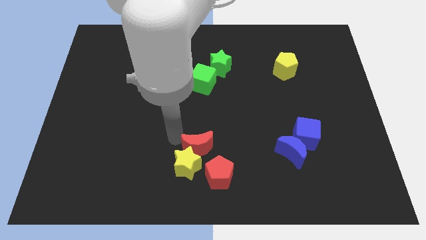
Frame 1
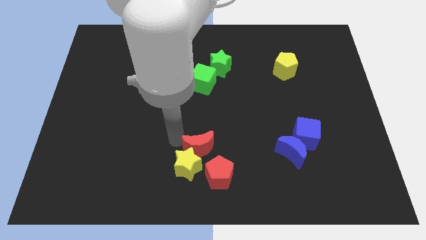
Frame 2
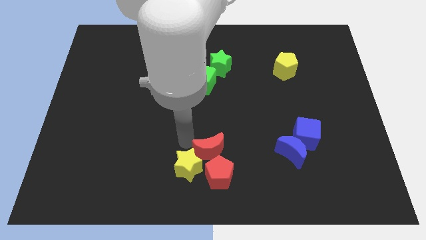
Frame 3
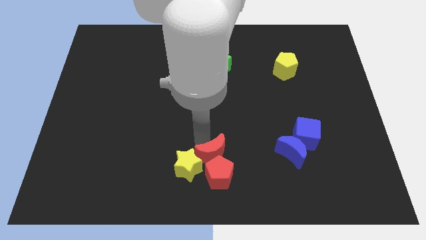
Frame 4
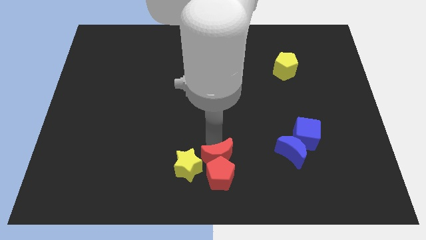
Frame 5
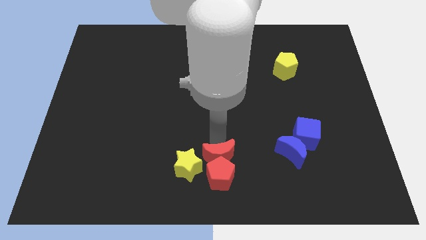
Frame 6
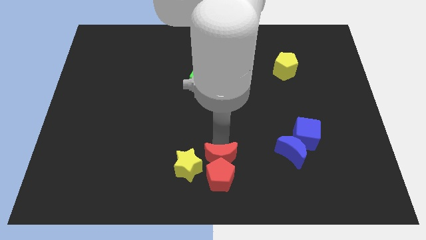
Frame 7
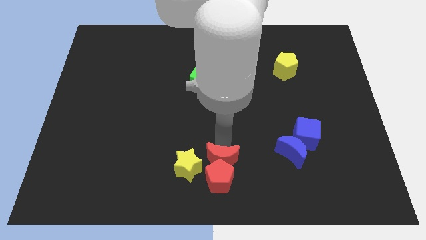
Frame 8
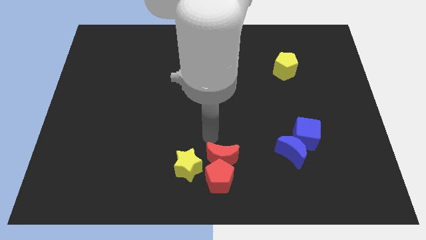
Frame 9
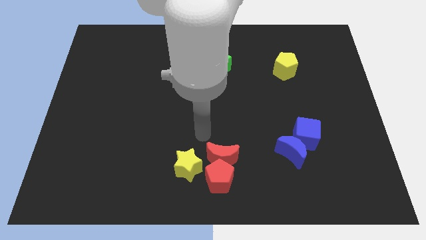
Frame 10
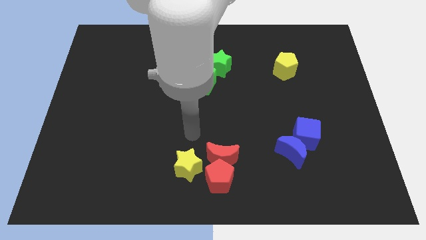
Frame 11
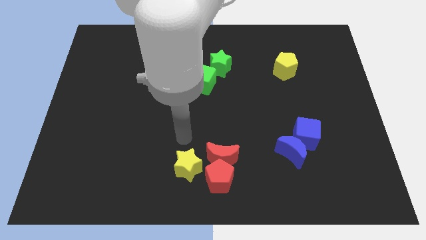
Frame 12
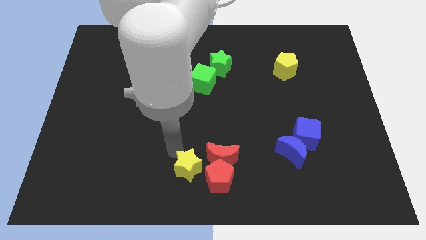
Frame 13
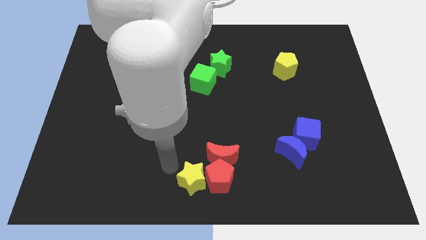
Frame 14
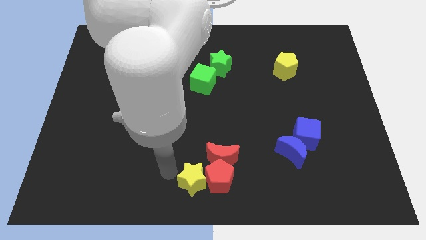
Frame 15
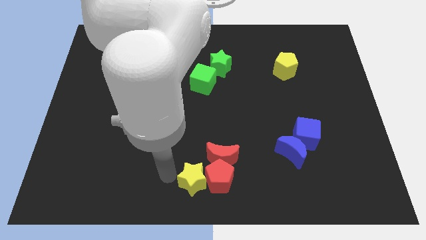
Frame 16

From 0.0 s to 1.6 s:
adjust the red moon on to the top of red pentagon

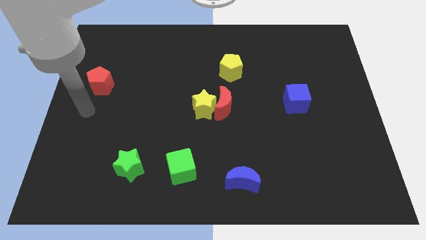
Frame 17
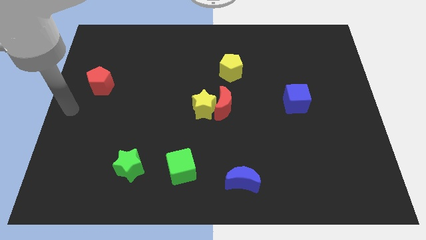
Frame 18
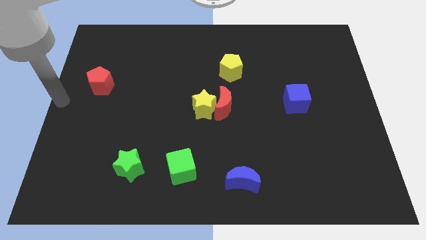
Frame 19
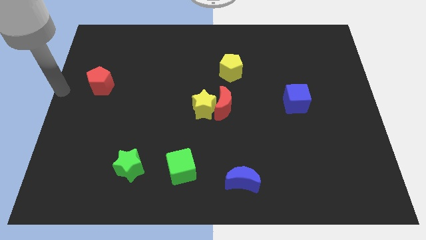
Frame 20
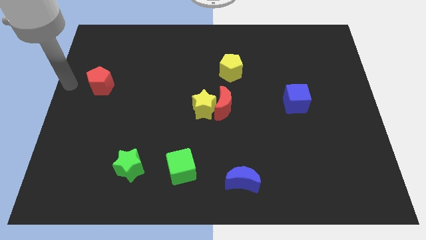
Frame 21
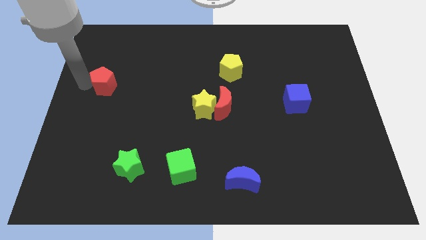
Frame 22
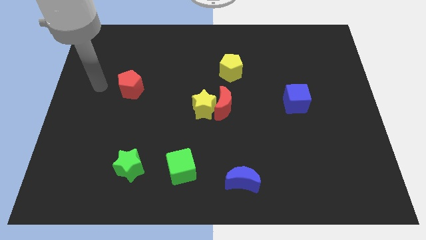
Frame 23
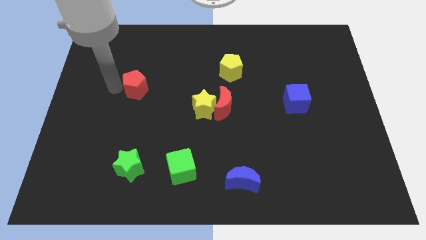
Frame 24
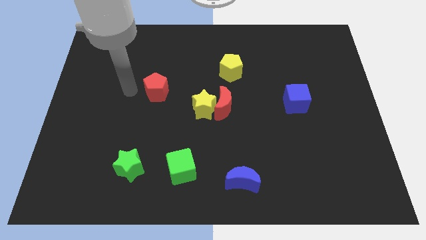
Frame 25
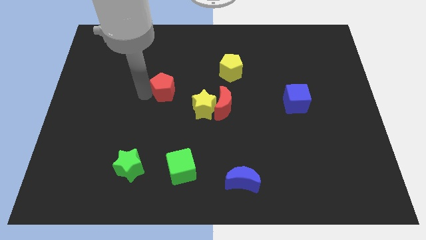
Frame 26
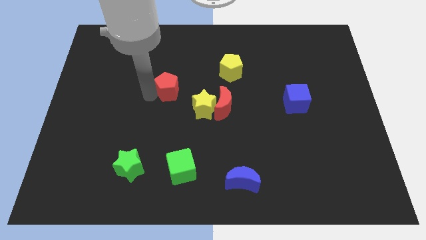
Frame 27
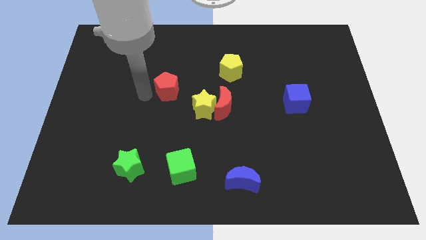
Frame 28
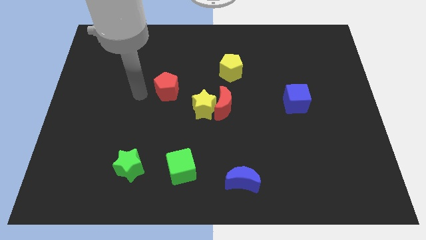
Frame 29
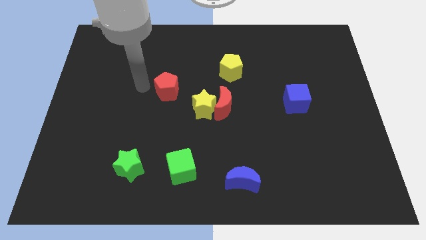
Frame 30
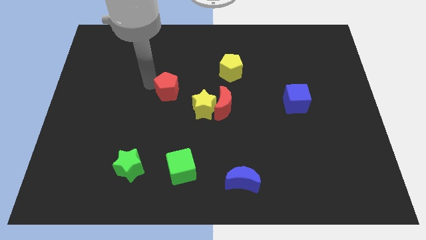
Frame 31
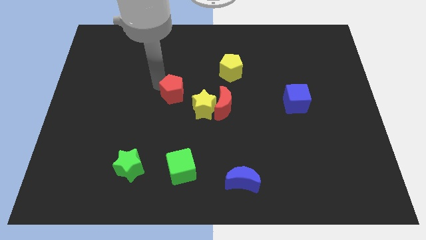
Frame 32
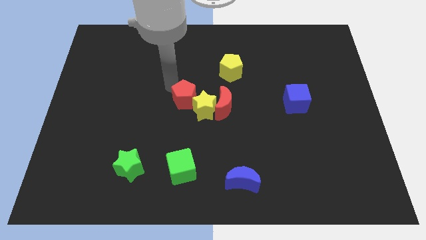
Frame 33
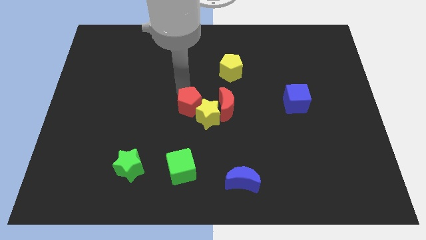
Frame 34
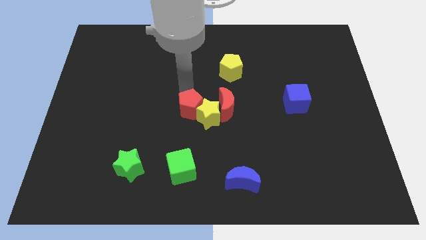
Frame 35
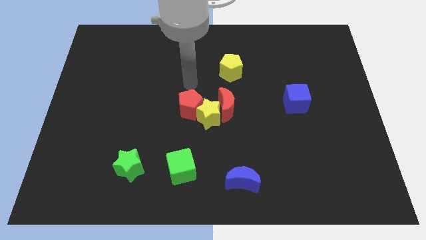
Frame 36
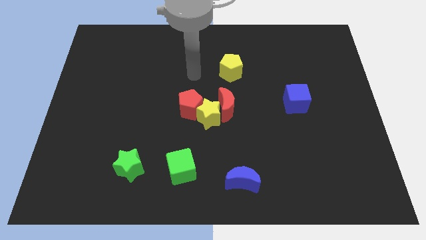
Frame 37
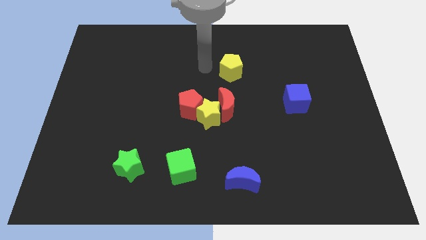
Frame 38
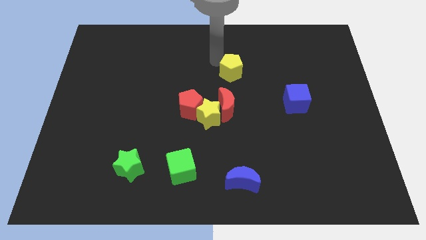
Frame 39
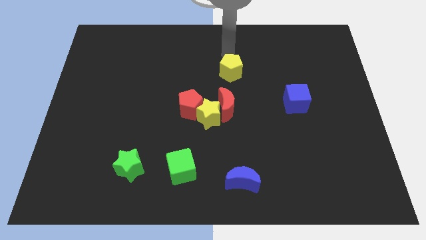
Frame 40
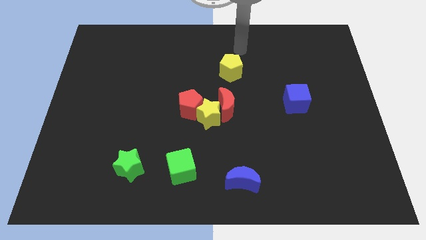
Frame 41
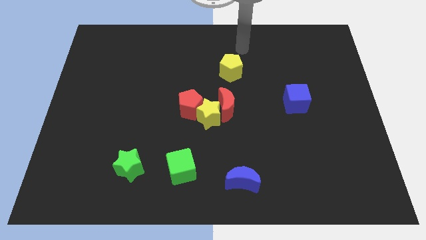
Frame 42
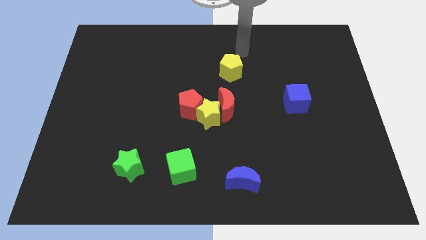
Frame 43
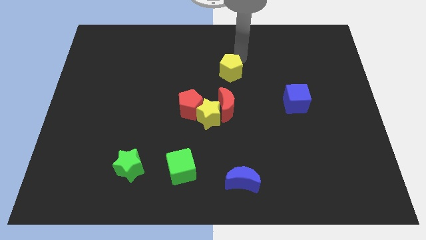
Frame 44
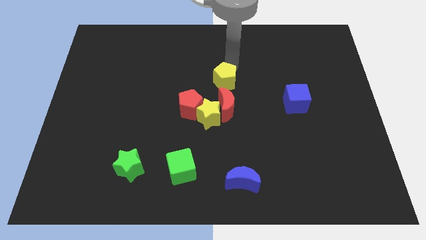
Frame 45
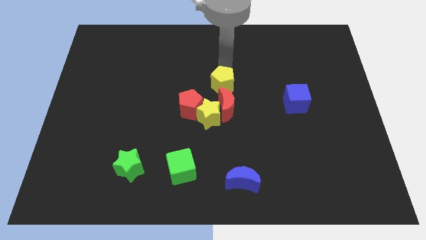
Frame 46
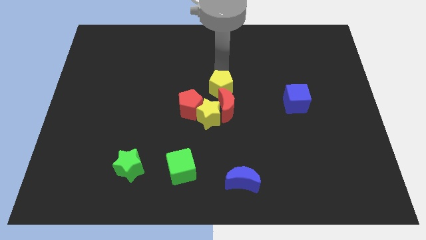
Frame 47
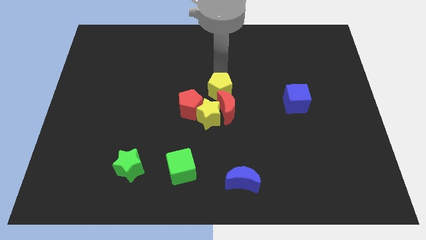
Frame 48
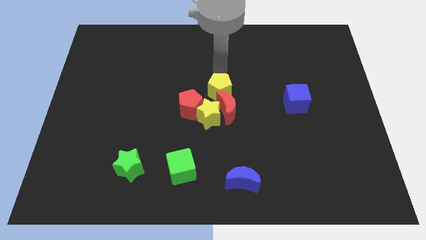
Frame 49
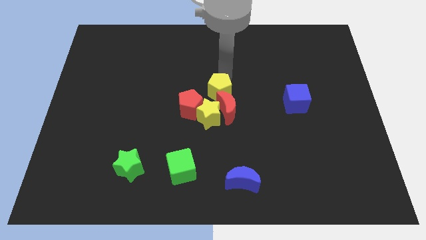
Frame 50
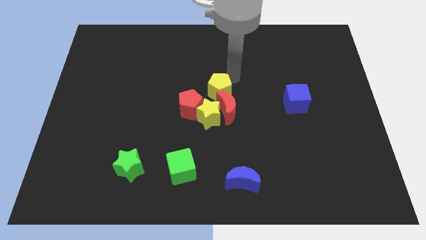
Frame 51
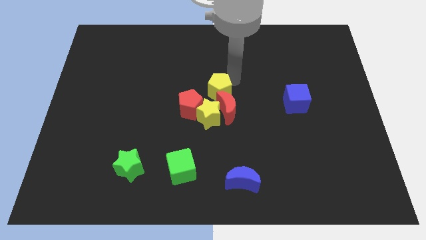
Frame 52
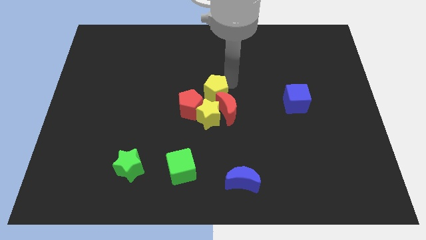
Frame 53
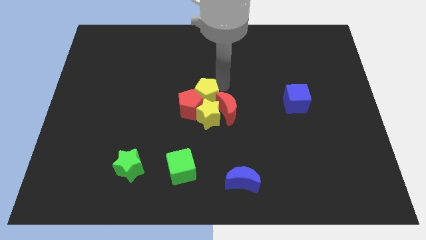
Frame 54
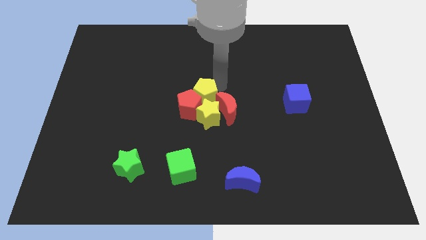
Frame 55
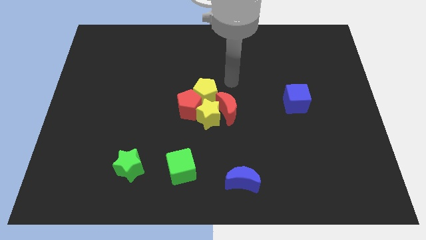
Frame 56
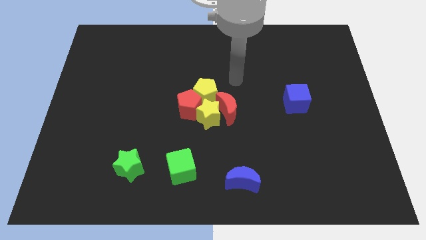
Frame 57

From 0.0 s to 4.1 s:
arrange the group of the yellow and the red blocks at the center of the board

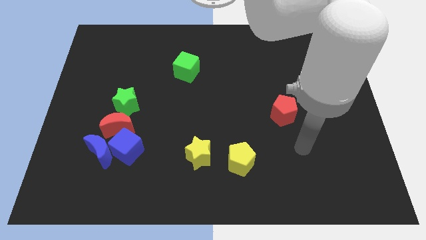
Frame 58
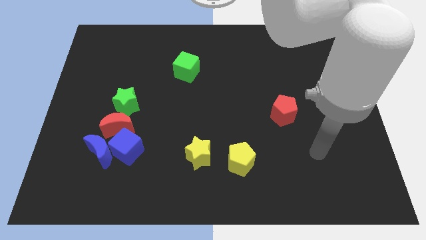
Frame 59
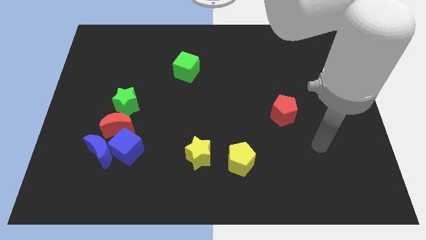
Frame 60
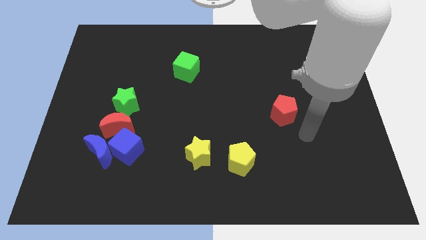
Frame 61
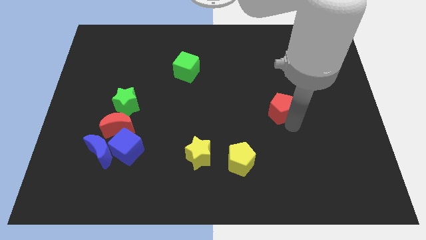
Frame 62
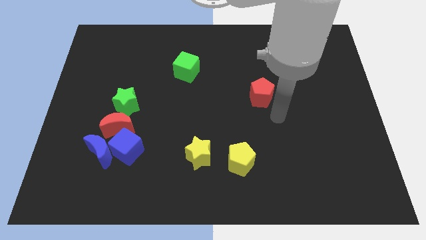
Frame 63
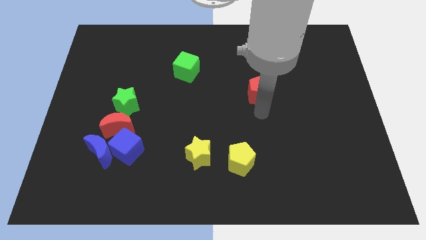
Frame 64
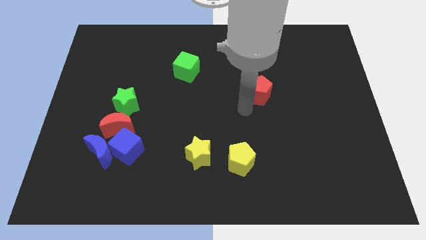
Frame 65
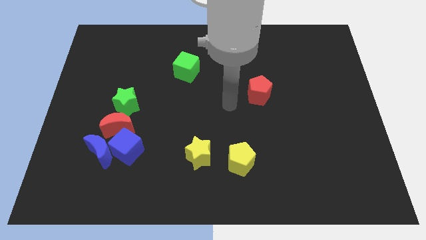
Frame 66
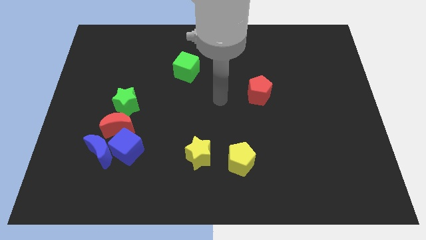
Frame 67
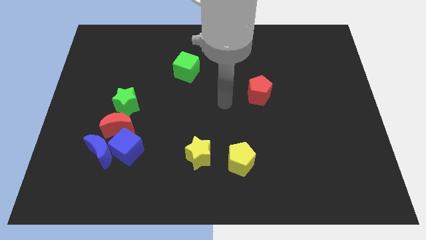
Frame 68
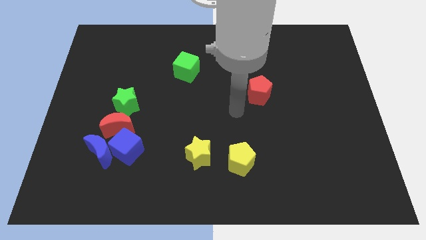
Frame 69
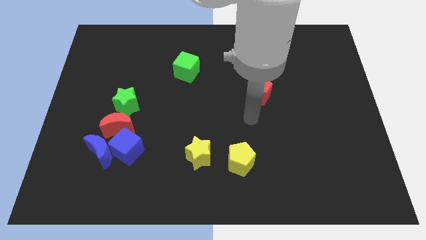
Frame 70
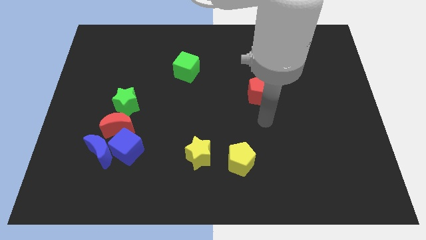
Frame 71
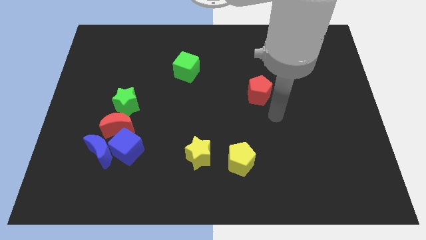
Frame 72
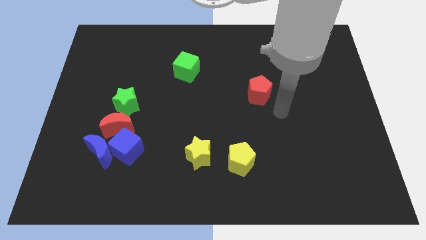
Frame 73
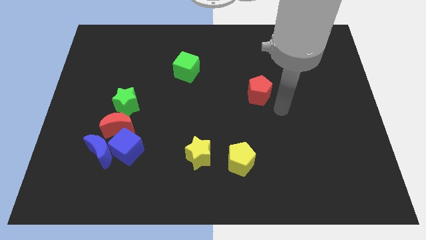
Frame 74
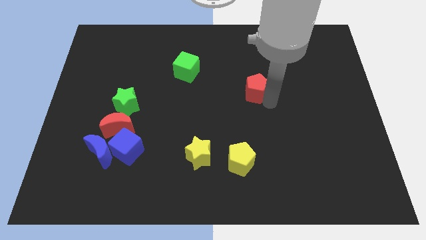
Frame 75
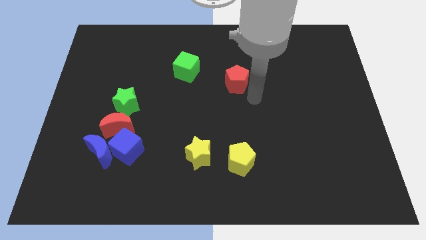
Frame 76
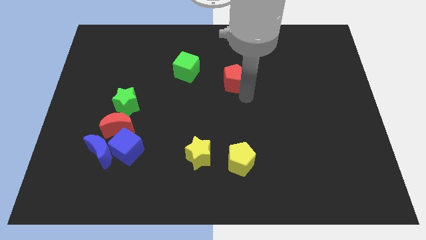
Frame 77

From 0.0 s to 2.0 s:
move the red pentagon to the top center of the board

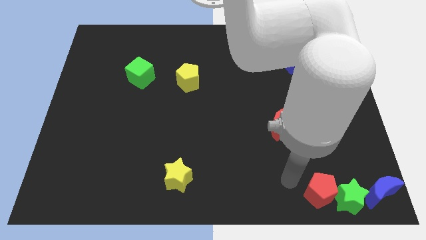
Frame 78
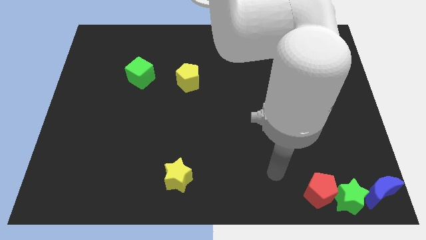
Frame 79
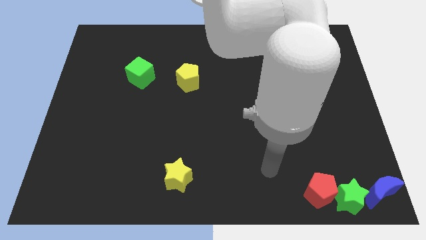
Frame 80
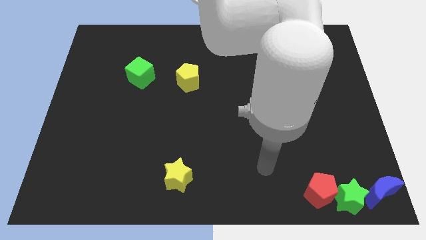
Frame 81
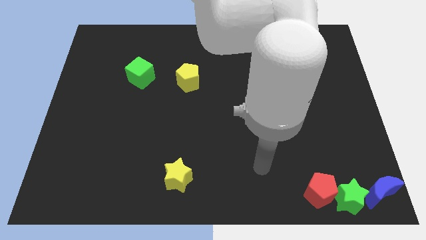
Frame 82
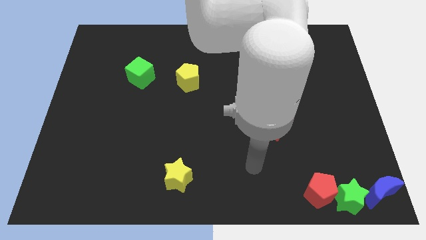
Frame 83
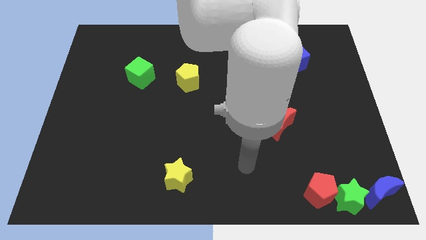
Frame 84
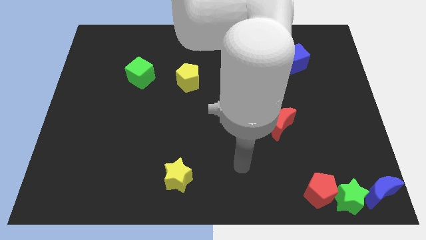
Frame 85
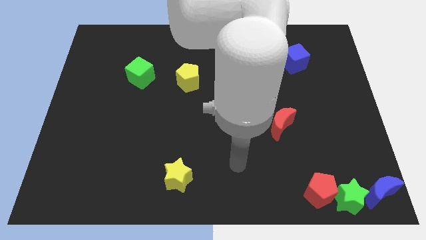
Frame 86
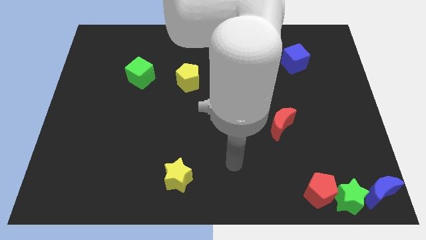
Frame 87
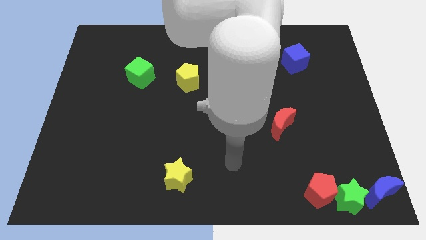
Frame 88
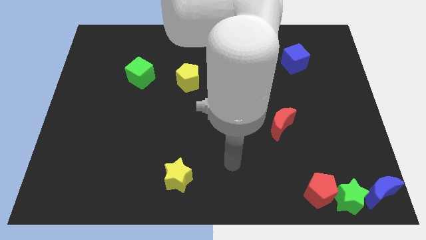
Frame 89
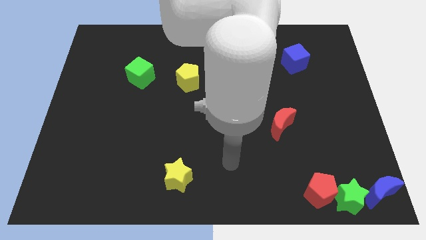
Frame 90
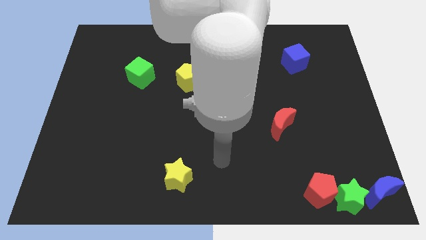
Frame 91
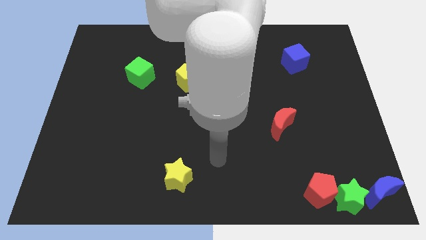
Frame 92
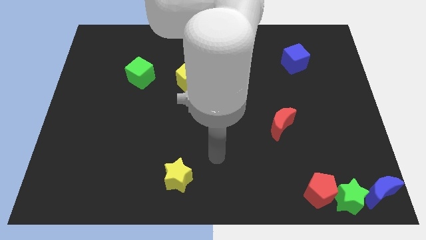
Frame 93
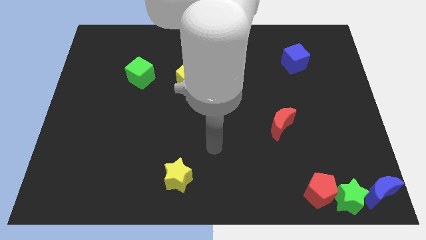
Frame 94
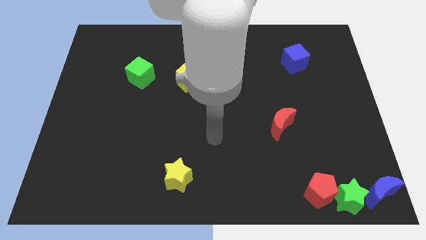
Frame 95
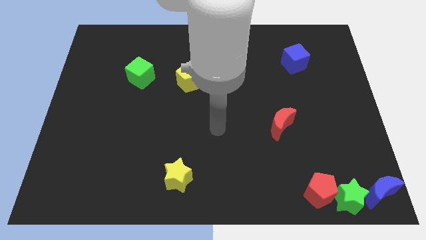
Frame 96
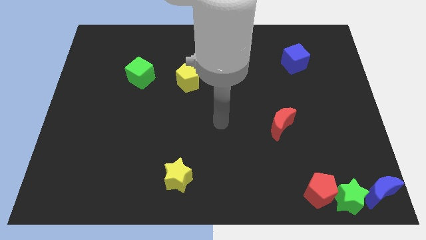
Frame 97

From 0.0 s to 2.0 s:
point your arm at the center of the board
